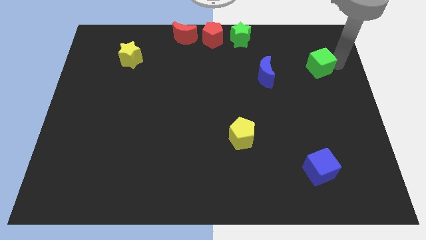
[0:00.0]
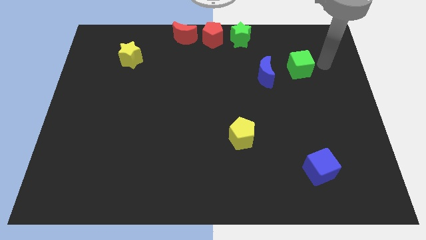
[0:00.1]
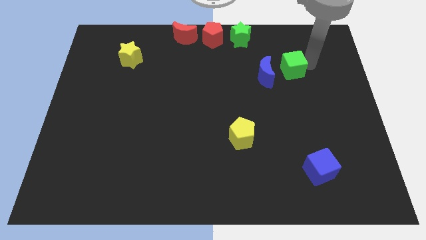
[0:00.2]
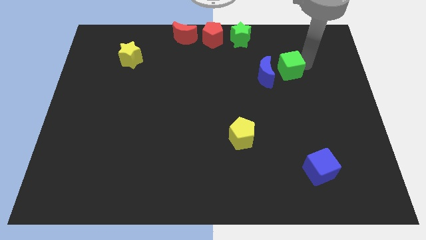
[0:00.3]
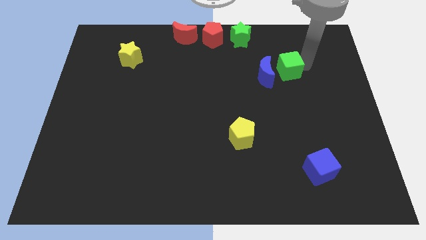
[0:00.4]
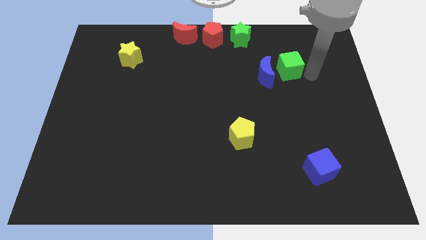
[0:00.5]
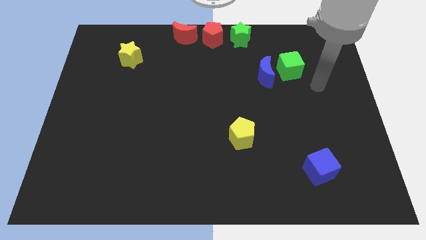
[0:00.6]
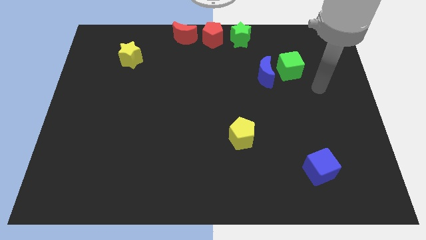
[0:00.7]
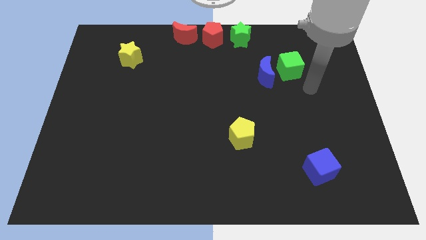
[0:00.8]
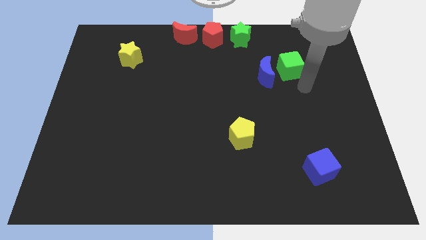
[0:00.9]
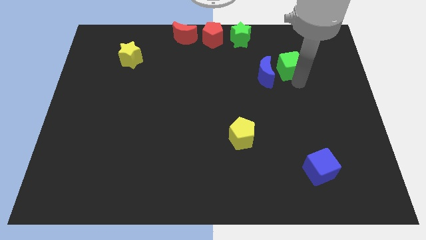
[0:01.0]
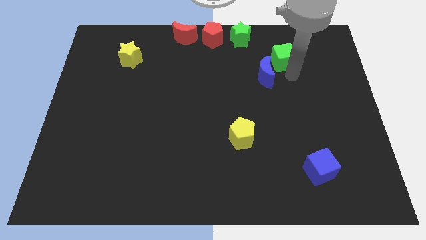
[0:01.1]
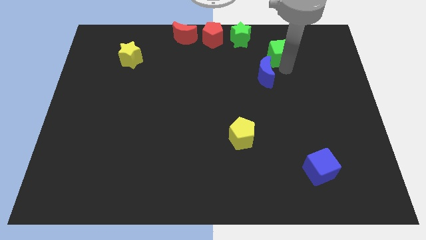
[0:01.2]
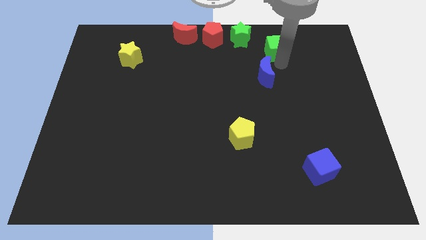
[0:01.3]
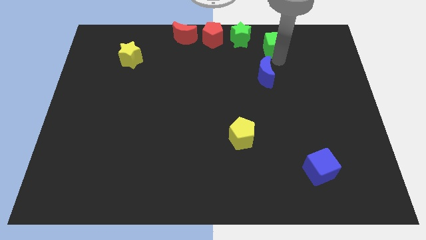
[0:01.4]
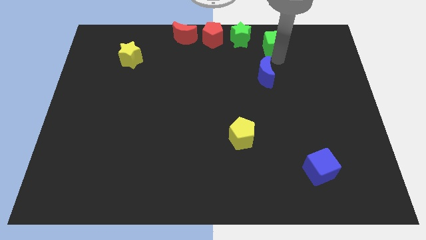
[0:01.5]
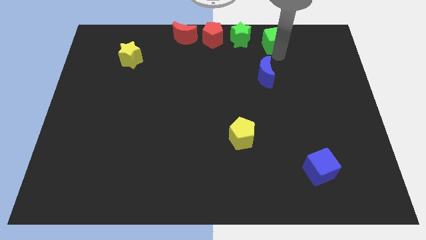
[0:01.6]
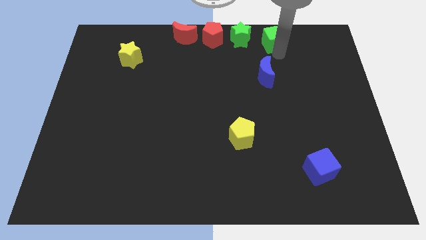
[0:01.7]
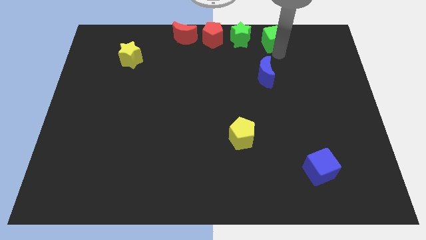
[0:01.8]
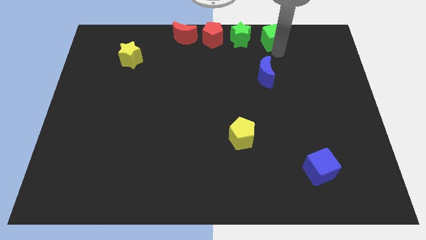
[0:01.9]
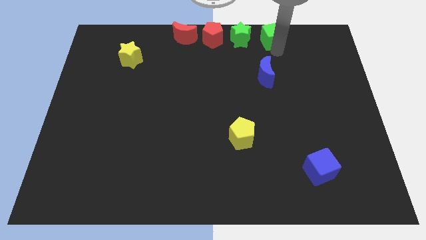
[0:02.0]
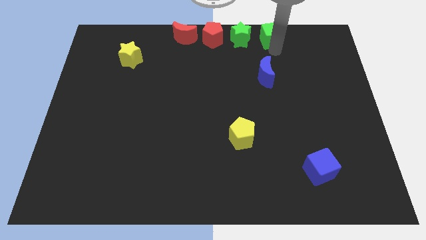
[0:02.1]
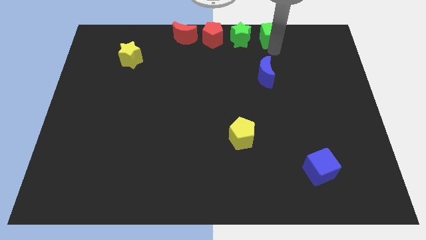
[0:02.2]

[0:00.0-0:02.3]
push the green cube towards the top of the board

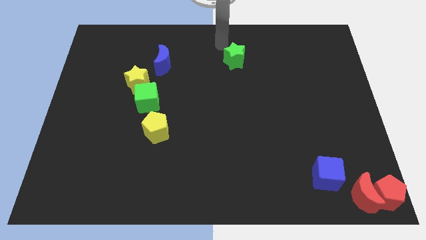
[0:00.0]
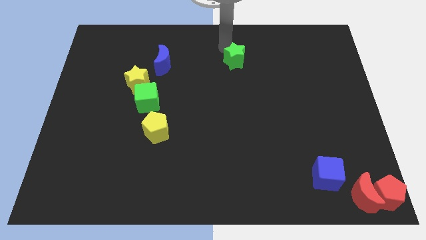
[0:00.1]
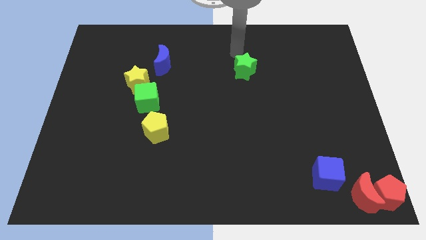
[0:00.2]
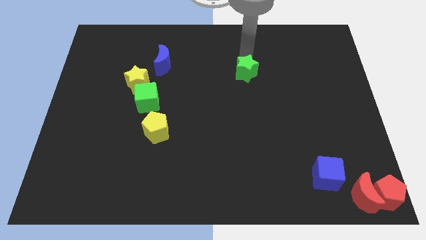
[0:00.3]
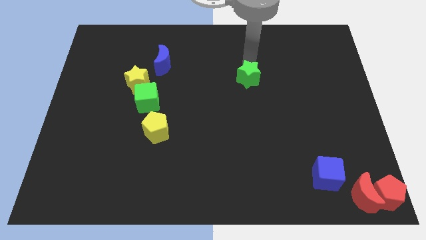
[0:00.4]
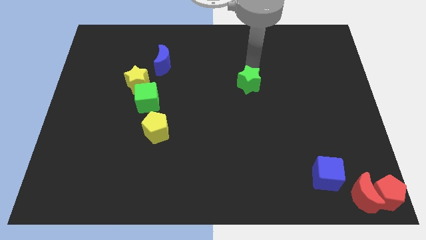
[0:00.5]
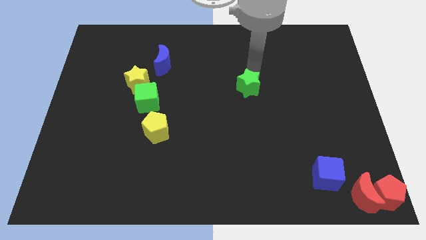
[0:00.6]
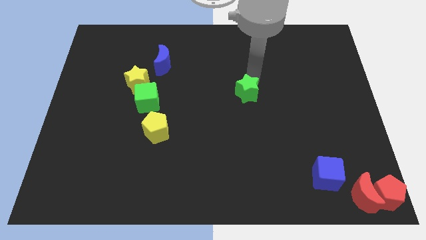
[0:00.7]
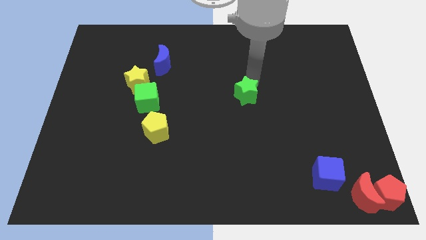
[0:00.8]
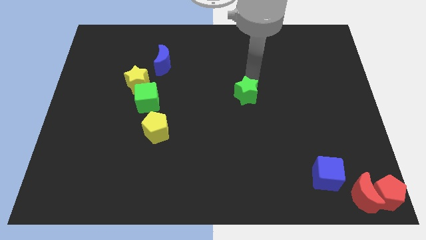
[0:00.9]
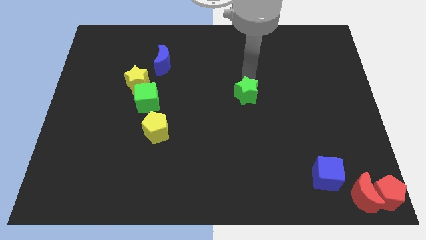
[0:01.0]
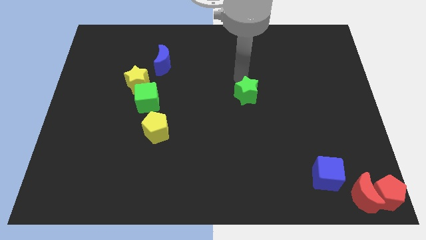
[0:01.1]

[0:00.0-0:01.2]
move green star to the center

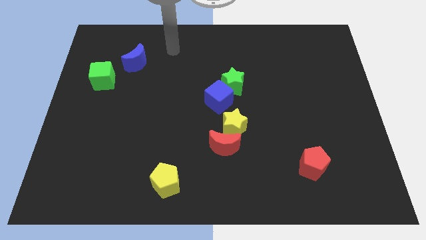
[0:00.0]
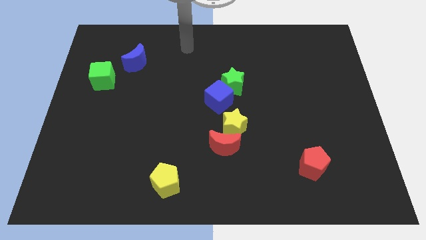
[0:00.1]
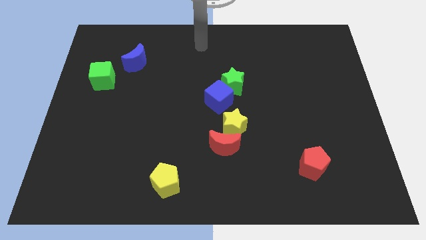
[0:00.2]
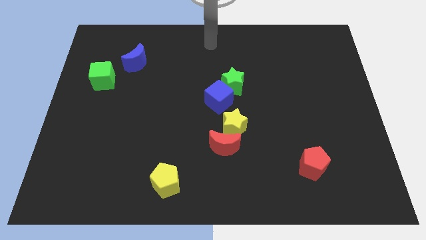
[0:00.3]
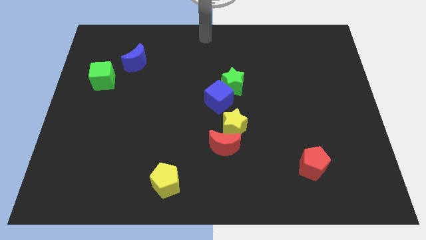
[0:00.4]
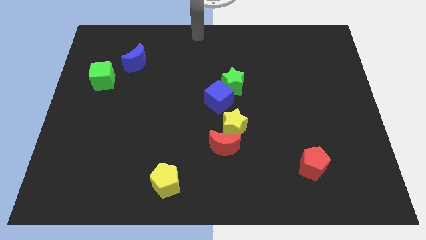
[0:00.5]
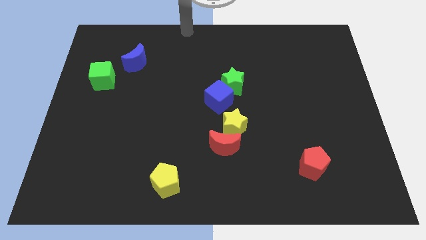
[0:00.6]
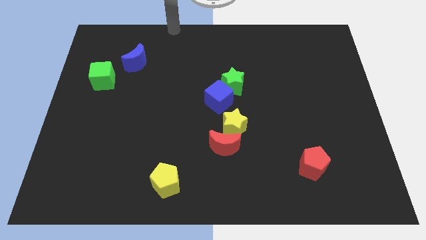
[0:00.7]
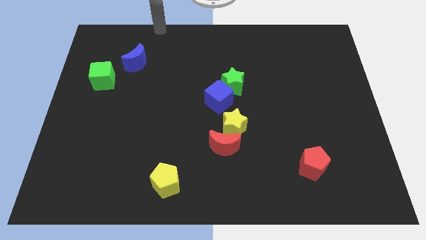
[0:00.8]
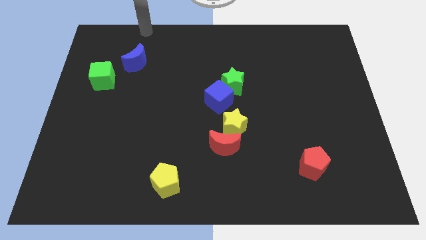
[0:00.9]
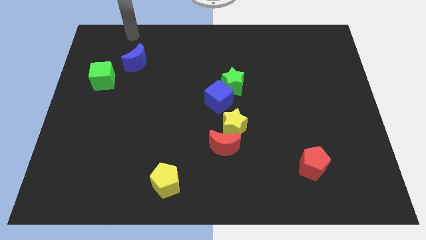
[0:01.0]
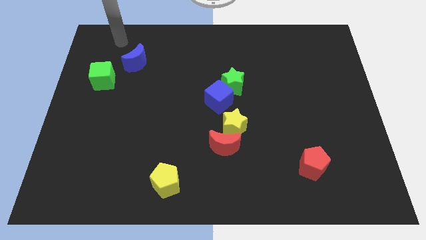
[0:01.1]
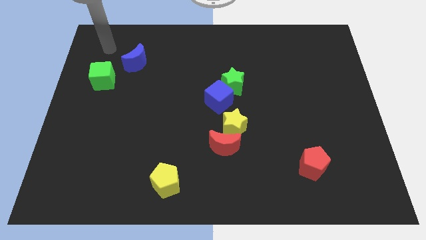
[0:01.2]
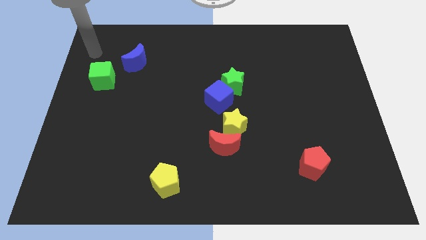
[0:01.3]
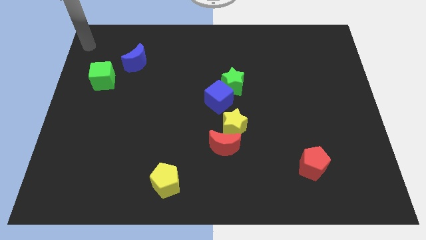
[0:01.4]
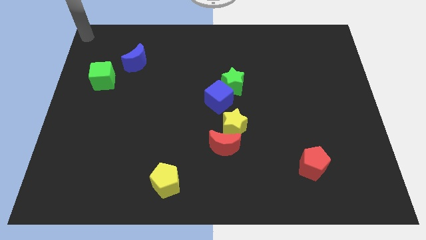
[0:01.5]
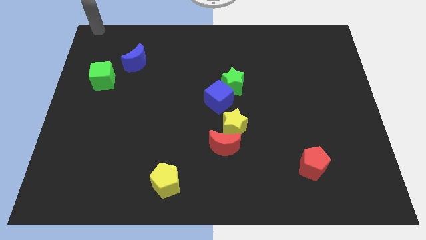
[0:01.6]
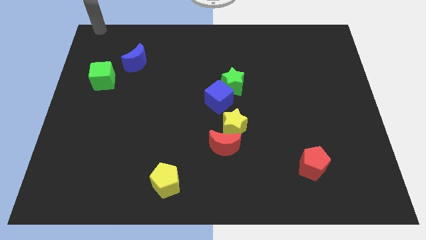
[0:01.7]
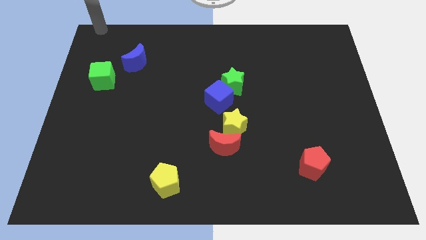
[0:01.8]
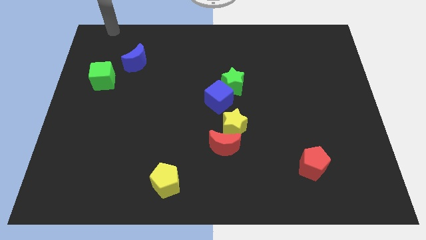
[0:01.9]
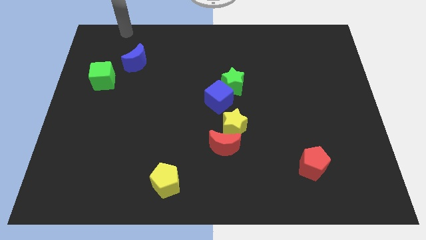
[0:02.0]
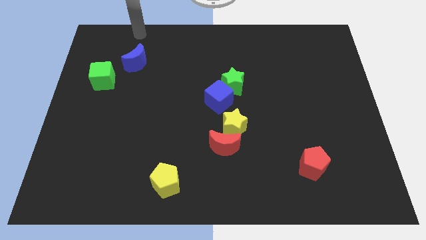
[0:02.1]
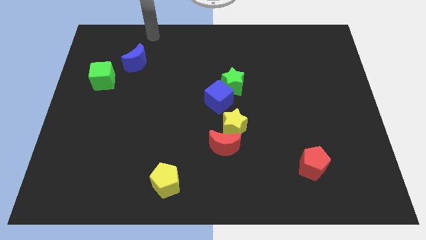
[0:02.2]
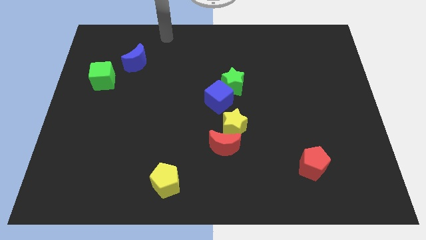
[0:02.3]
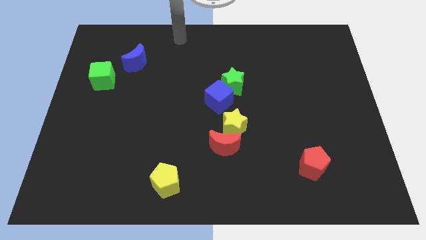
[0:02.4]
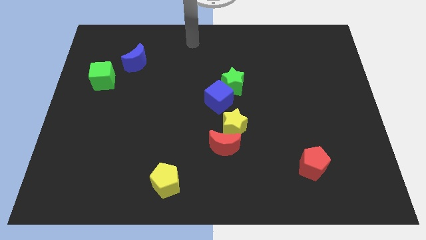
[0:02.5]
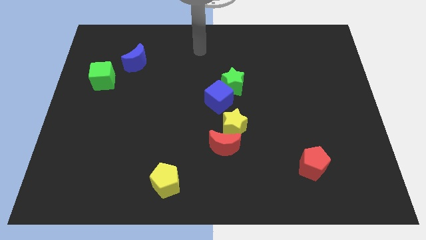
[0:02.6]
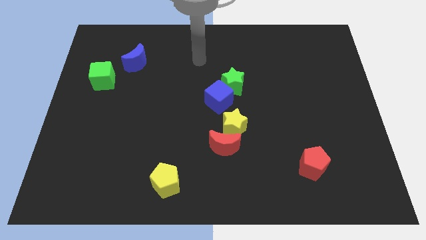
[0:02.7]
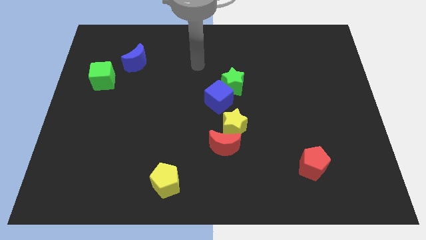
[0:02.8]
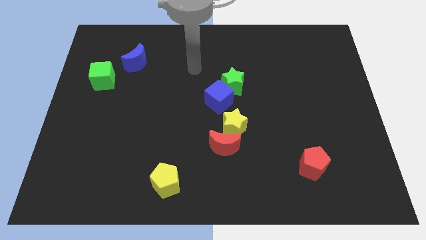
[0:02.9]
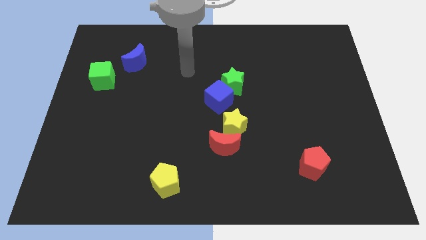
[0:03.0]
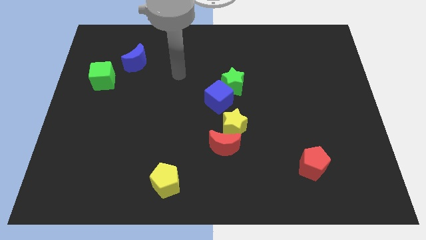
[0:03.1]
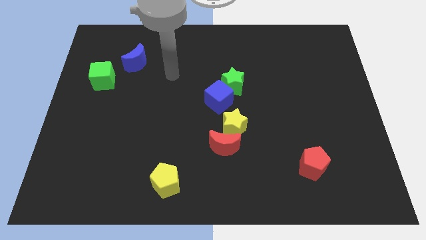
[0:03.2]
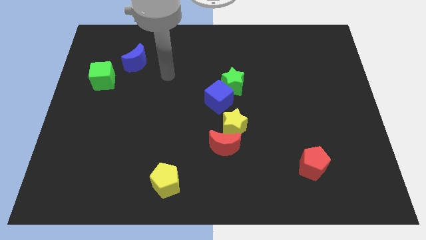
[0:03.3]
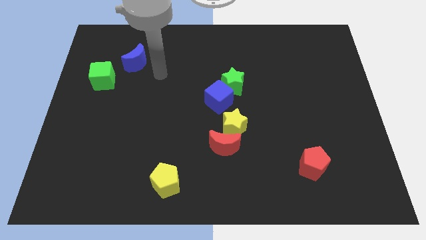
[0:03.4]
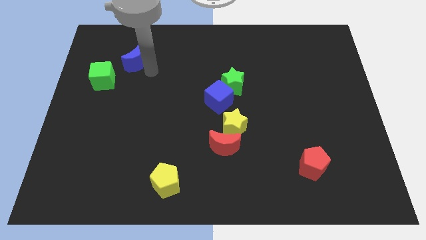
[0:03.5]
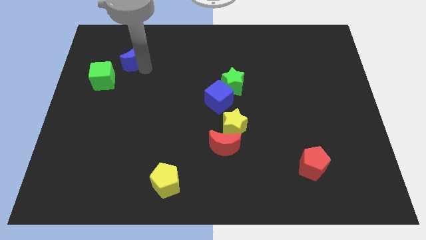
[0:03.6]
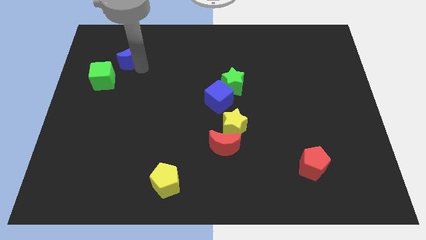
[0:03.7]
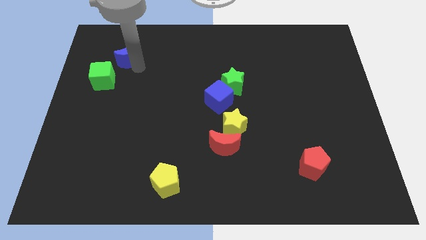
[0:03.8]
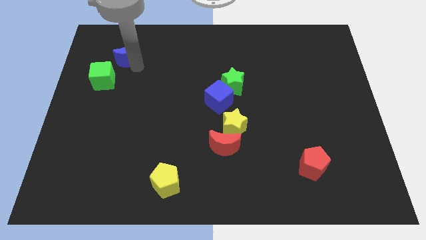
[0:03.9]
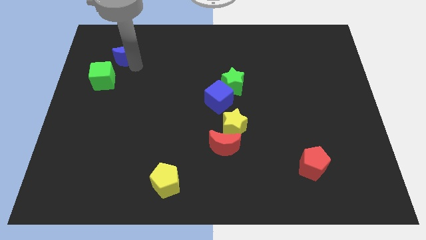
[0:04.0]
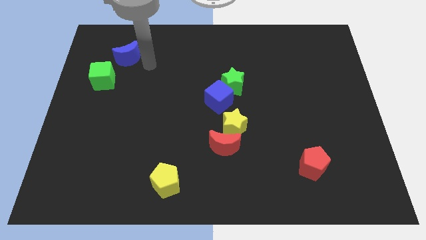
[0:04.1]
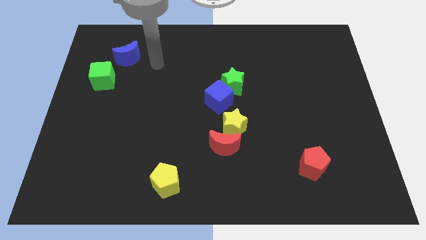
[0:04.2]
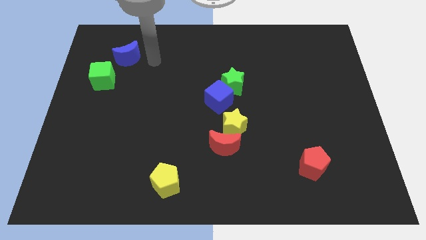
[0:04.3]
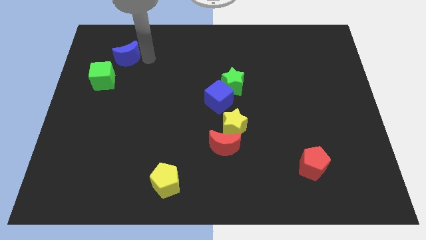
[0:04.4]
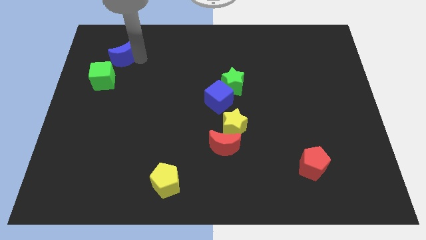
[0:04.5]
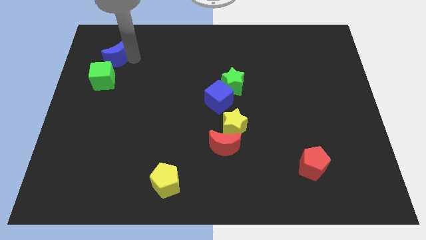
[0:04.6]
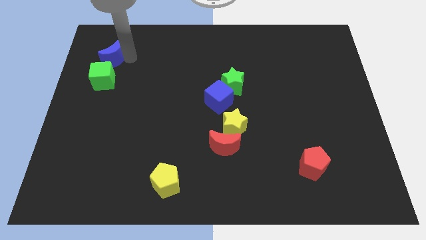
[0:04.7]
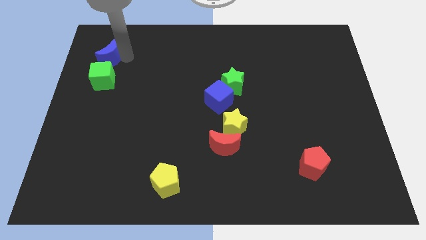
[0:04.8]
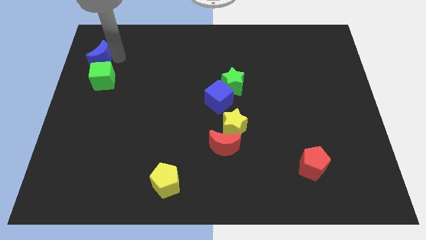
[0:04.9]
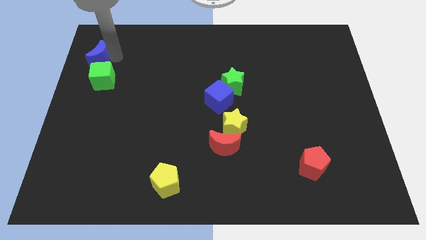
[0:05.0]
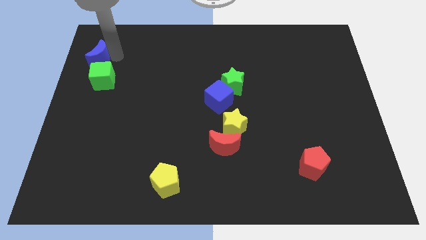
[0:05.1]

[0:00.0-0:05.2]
slide the blue crescent to the top side of the green cube

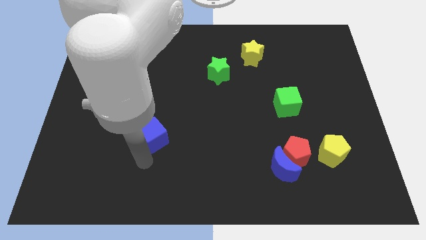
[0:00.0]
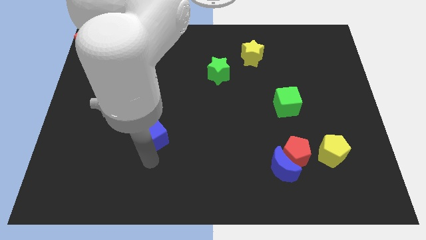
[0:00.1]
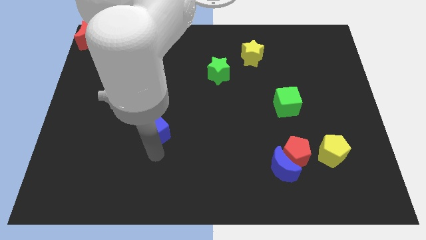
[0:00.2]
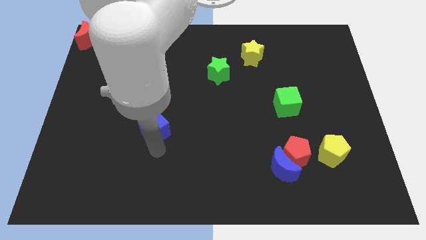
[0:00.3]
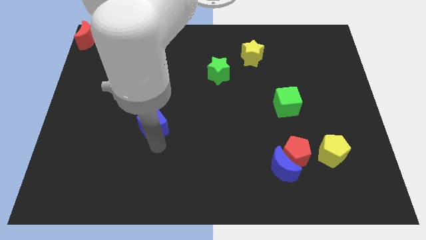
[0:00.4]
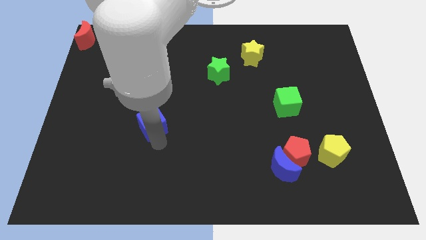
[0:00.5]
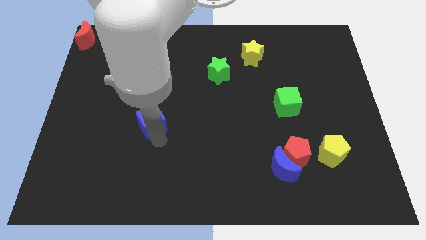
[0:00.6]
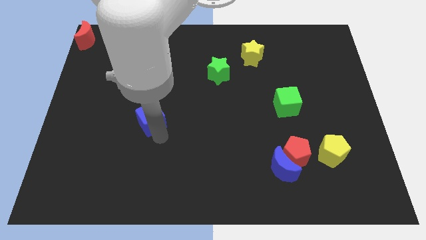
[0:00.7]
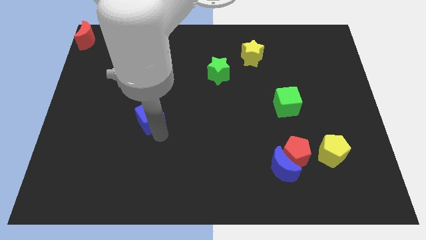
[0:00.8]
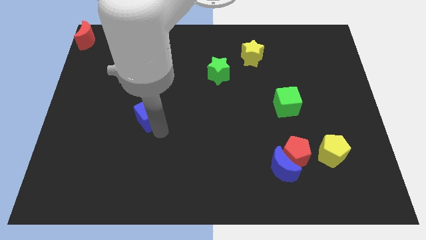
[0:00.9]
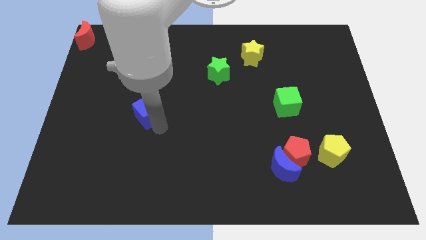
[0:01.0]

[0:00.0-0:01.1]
slightly push blue cube upwards
